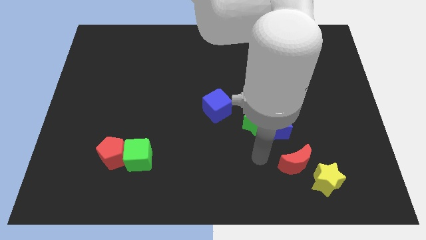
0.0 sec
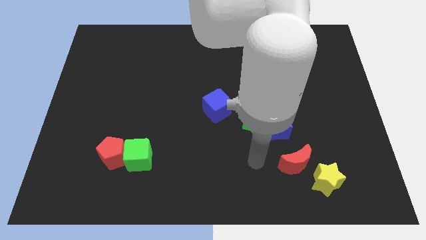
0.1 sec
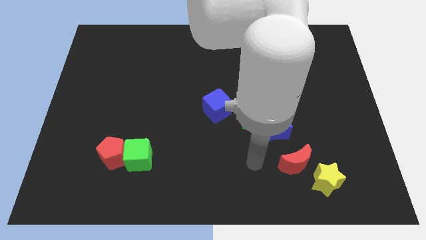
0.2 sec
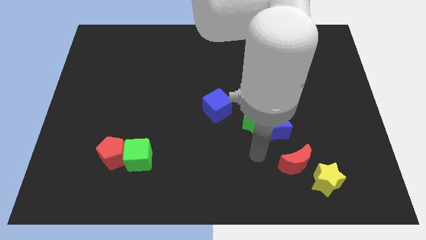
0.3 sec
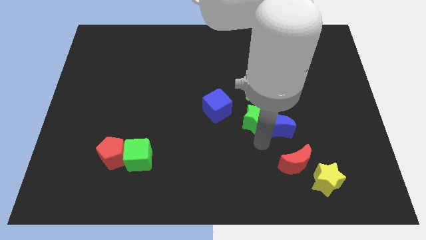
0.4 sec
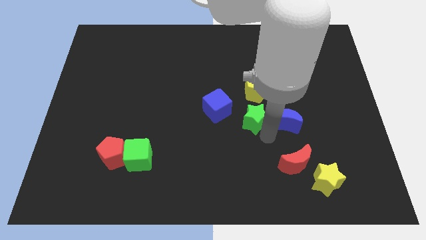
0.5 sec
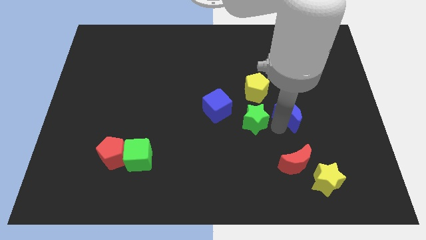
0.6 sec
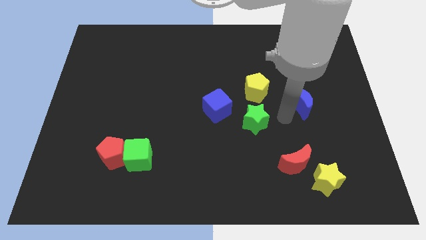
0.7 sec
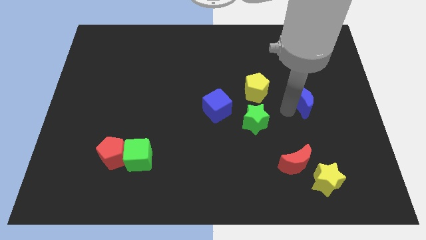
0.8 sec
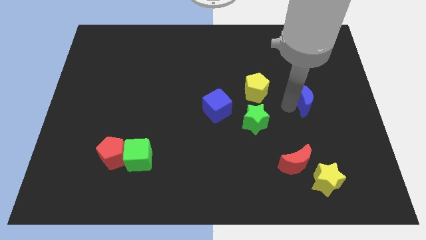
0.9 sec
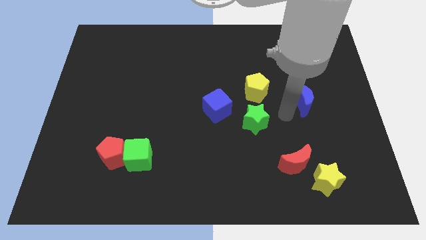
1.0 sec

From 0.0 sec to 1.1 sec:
move the blue crescent away from the green star

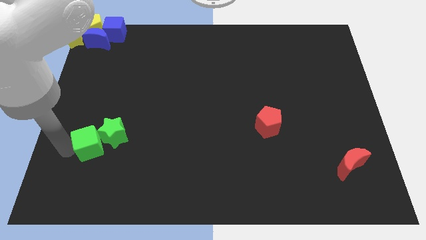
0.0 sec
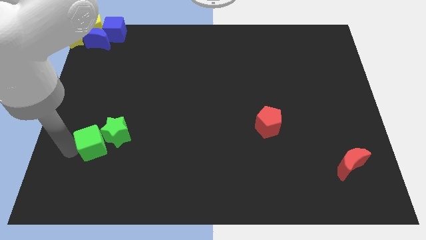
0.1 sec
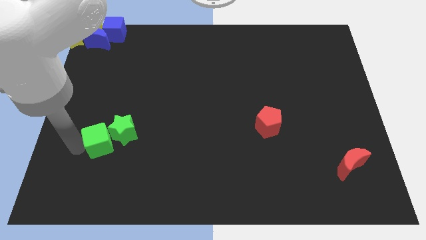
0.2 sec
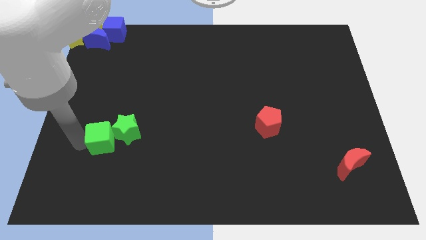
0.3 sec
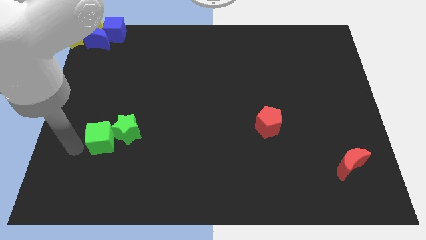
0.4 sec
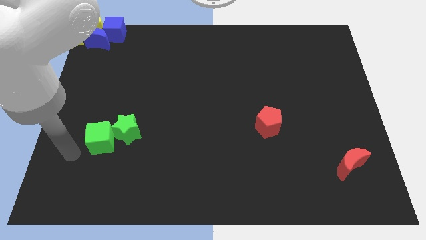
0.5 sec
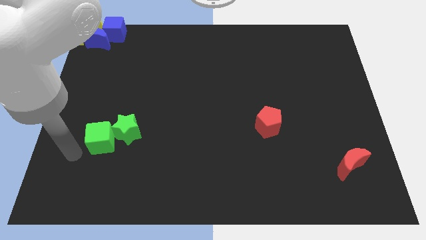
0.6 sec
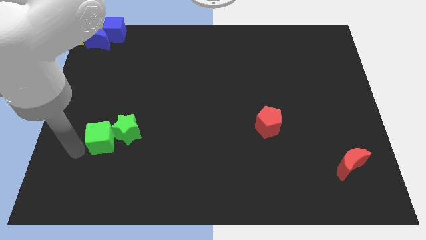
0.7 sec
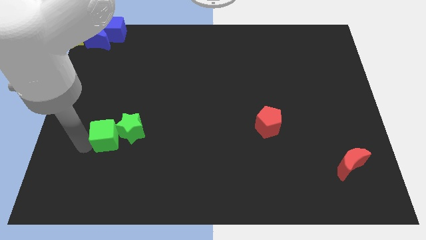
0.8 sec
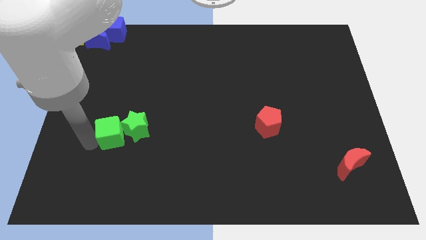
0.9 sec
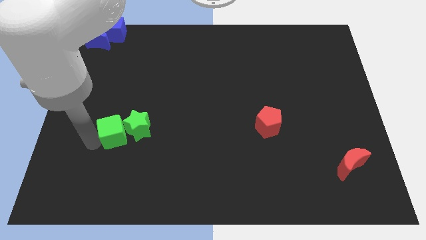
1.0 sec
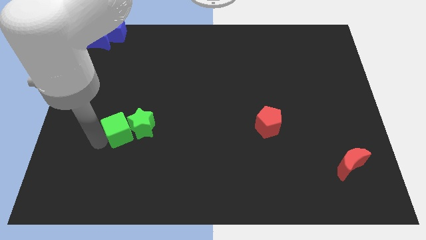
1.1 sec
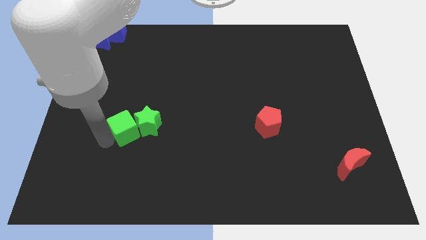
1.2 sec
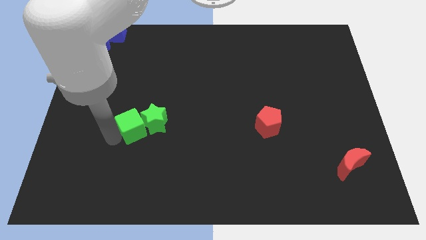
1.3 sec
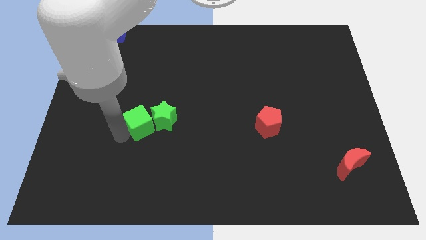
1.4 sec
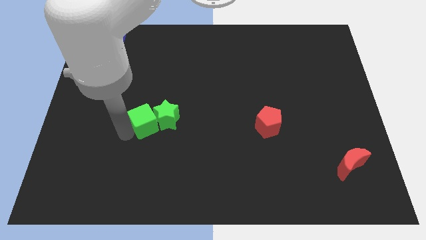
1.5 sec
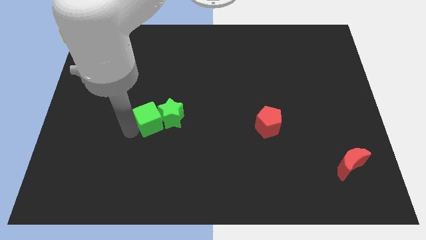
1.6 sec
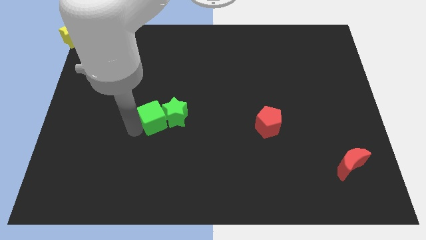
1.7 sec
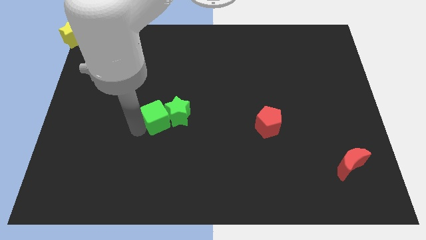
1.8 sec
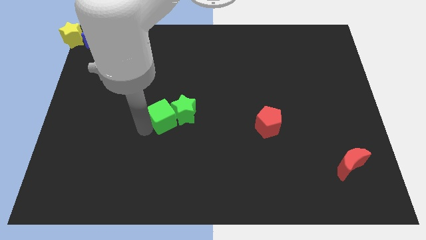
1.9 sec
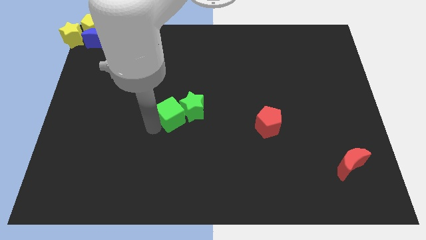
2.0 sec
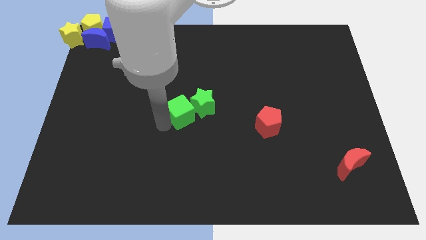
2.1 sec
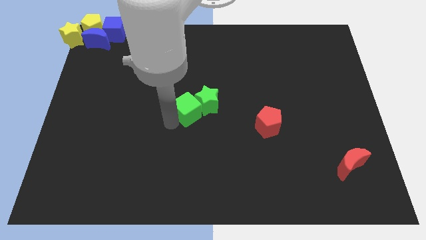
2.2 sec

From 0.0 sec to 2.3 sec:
move the green cube and green star to the center of the board

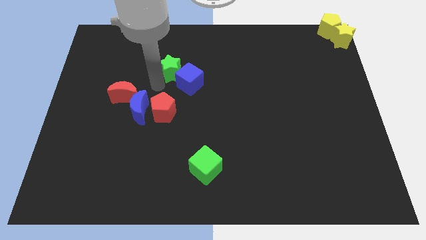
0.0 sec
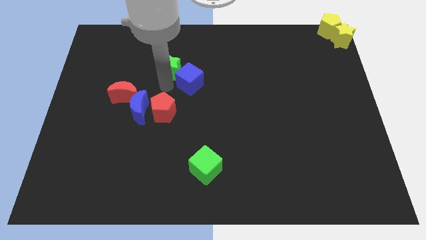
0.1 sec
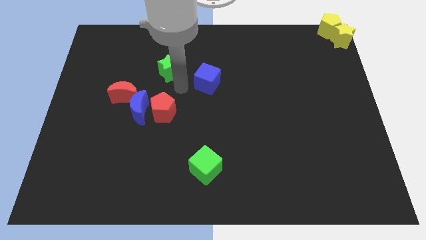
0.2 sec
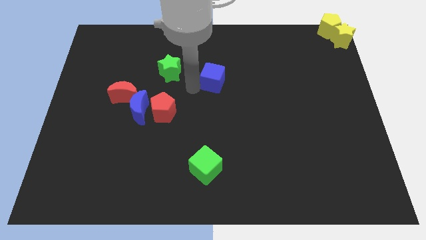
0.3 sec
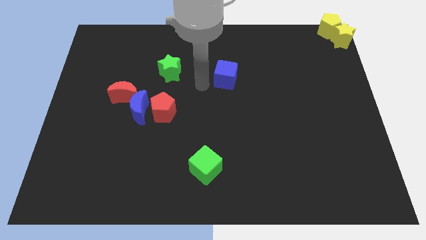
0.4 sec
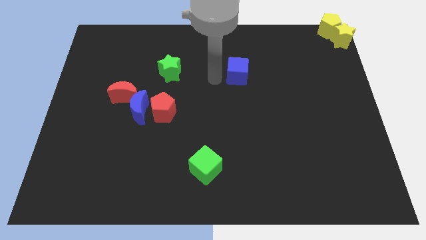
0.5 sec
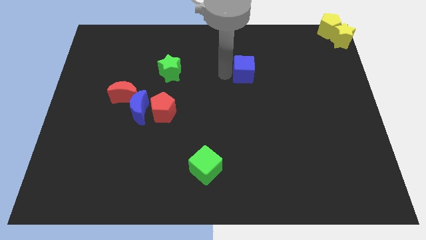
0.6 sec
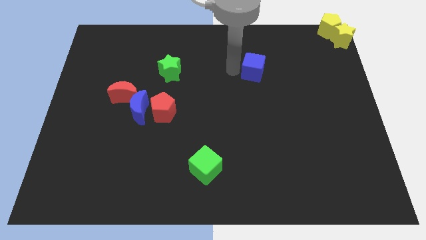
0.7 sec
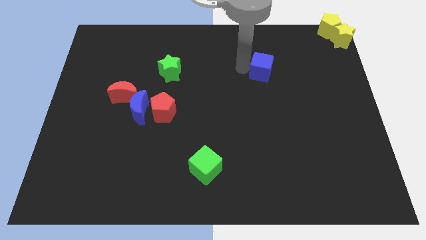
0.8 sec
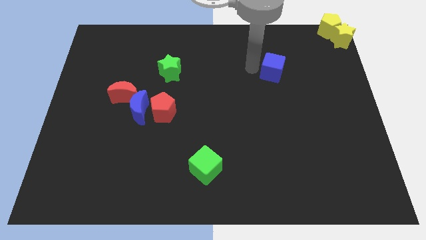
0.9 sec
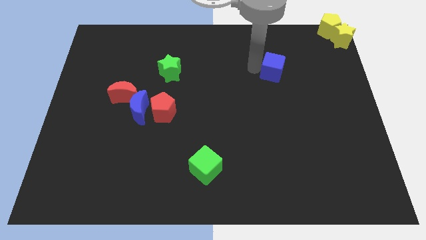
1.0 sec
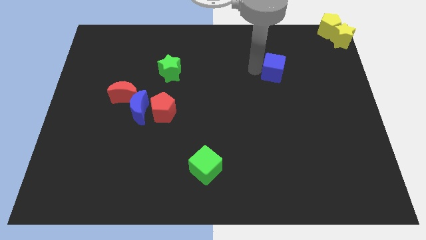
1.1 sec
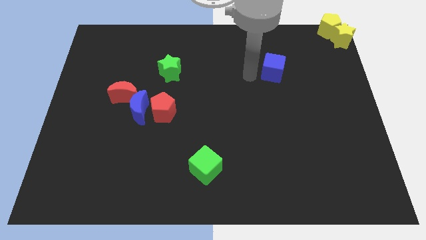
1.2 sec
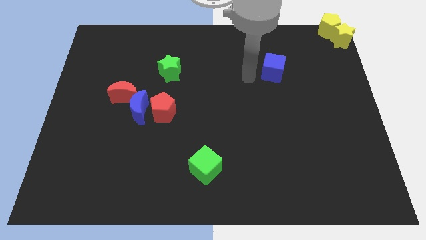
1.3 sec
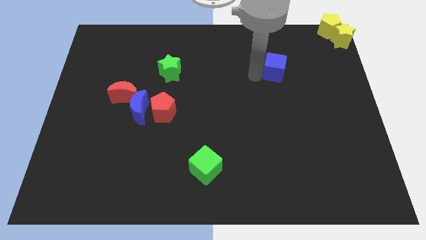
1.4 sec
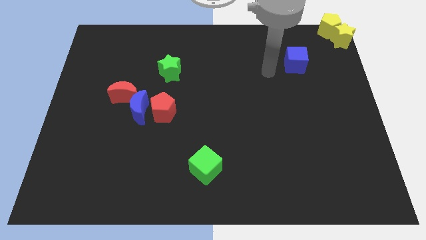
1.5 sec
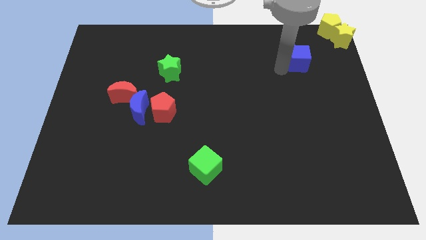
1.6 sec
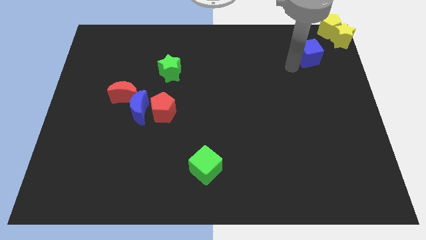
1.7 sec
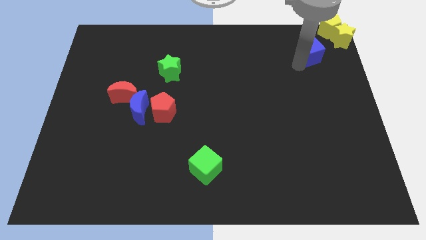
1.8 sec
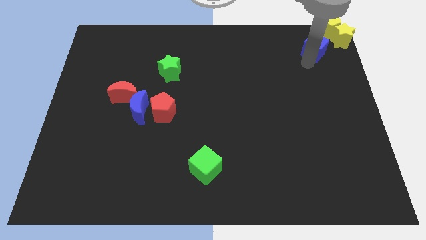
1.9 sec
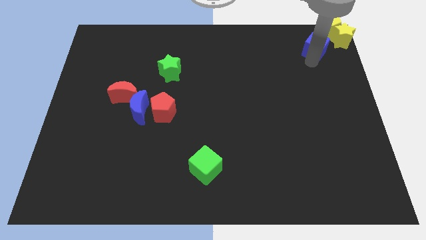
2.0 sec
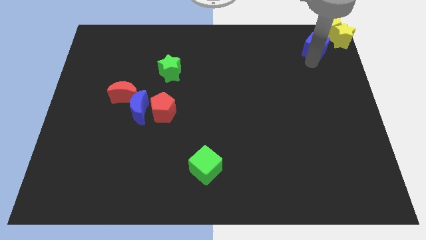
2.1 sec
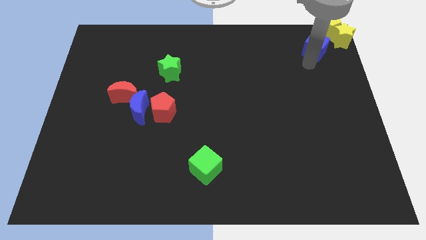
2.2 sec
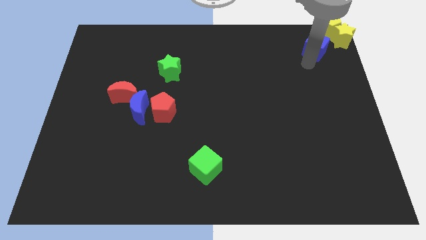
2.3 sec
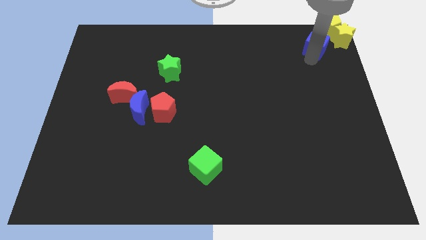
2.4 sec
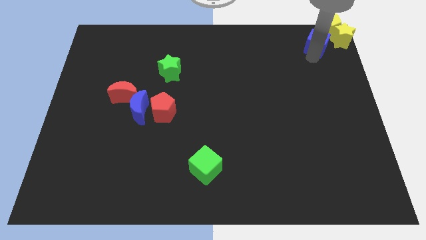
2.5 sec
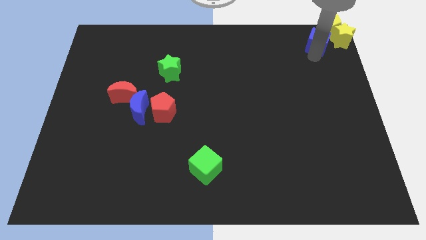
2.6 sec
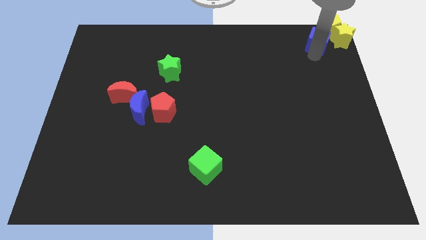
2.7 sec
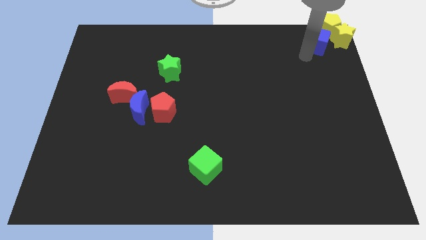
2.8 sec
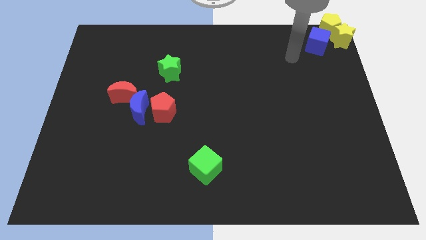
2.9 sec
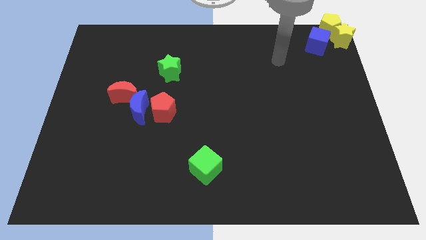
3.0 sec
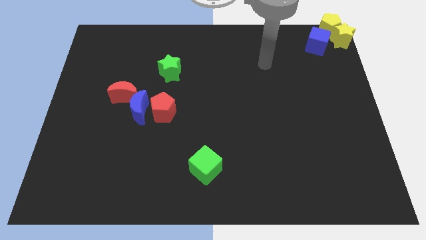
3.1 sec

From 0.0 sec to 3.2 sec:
put the blue cube at the left side of the yellow things

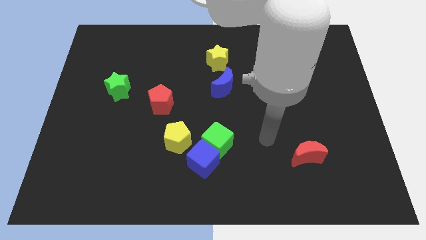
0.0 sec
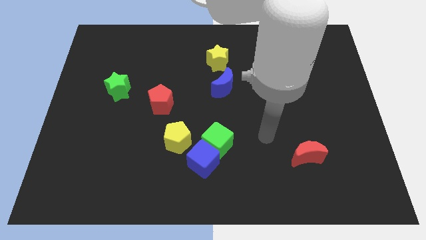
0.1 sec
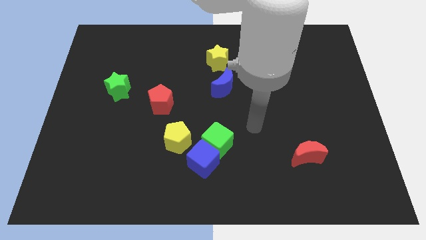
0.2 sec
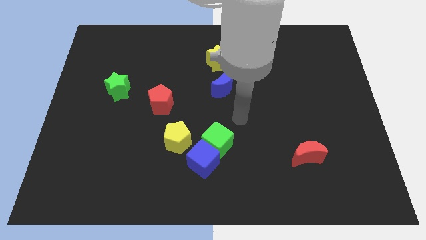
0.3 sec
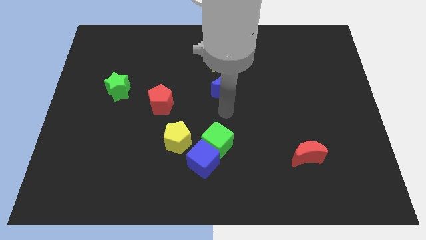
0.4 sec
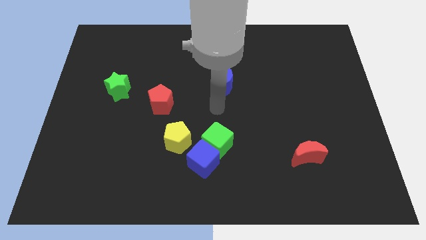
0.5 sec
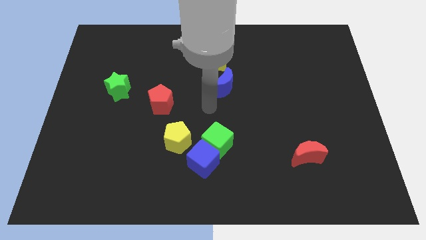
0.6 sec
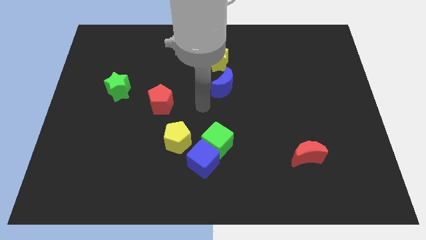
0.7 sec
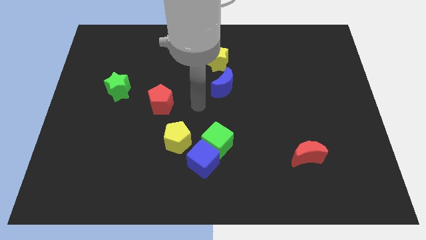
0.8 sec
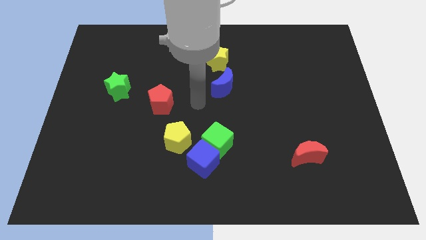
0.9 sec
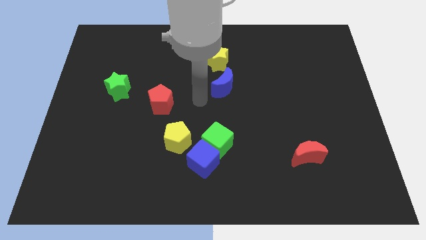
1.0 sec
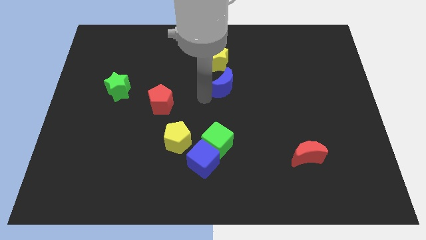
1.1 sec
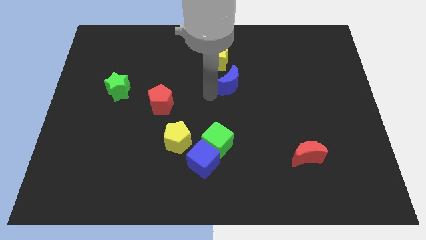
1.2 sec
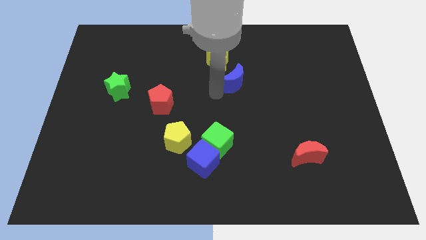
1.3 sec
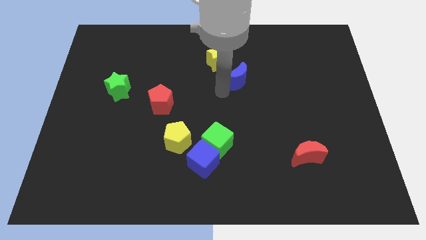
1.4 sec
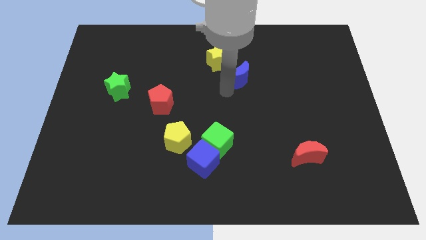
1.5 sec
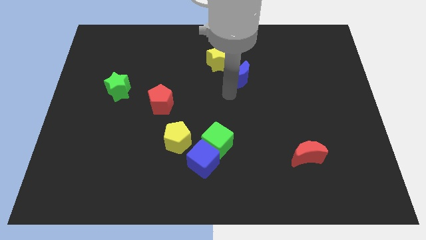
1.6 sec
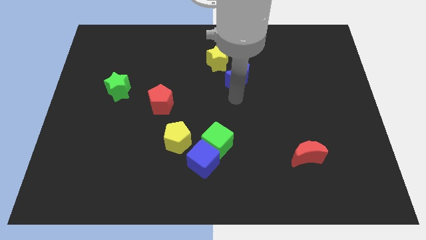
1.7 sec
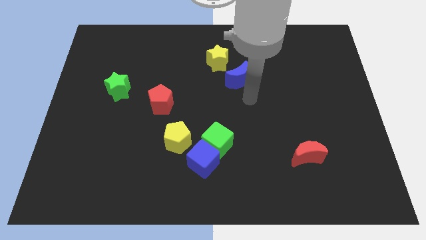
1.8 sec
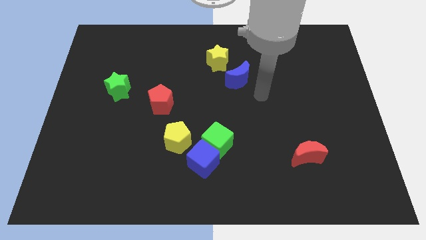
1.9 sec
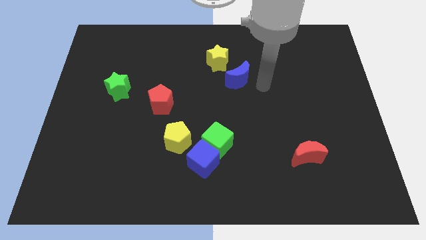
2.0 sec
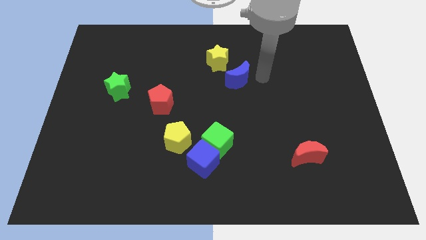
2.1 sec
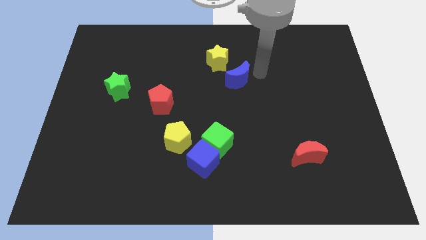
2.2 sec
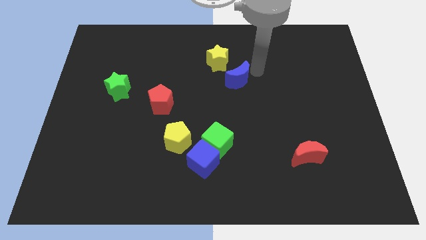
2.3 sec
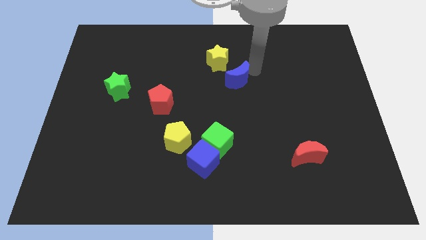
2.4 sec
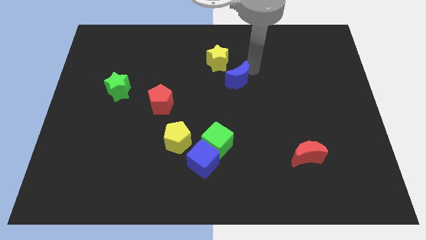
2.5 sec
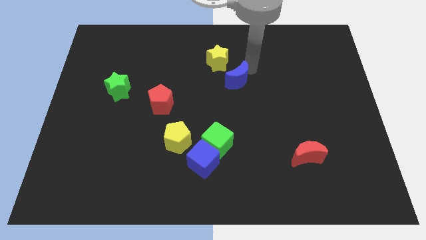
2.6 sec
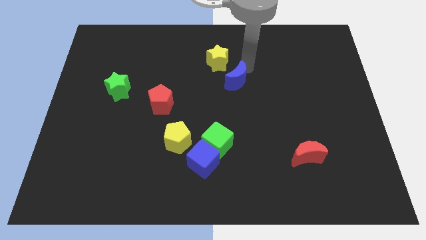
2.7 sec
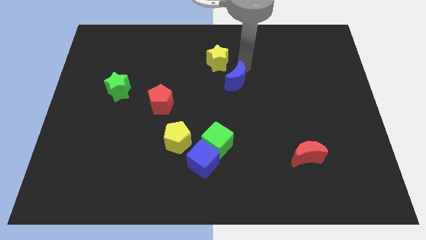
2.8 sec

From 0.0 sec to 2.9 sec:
place your arm at the top of blue moon
